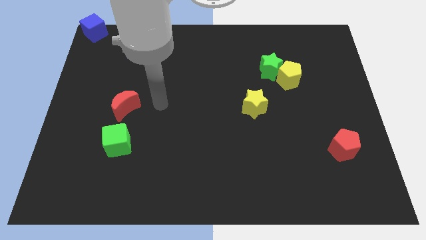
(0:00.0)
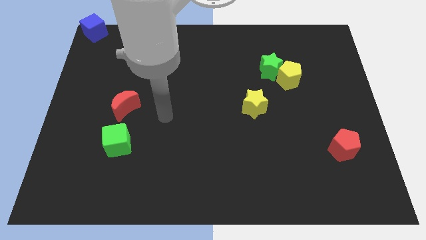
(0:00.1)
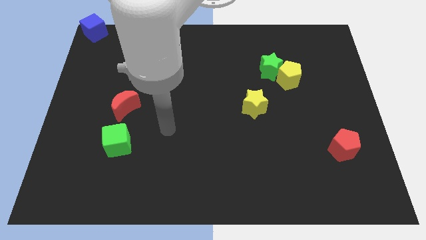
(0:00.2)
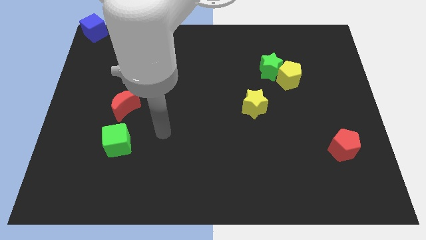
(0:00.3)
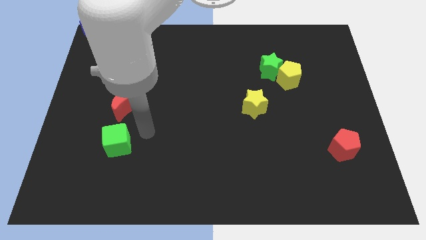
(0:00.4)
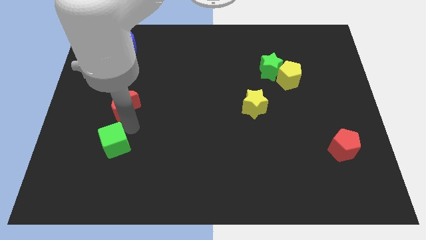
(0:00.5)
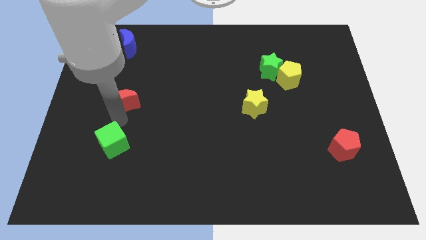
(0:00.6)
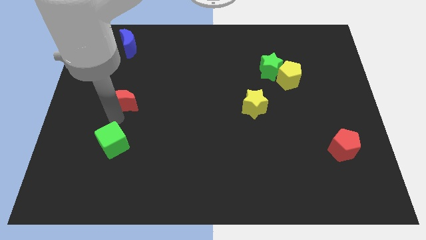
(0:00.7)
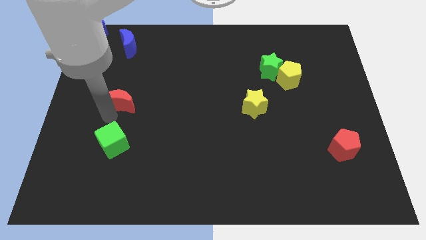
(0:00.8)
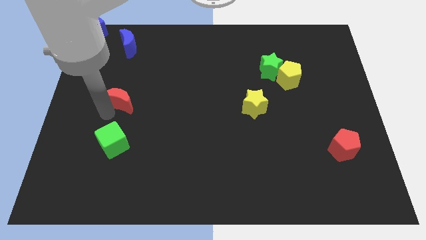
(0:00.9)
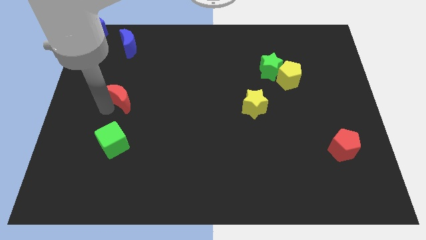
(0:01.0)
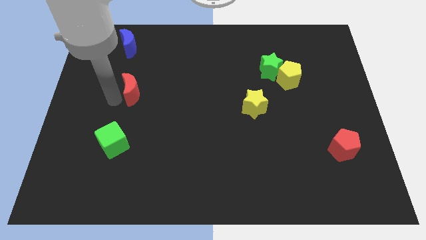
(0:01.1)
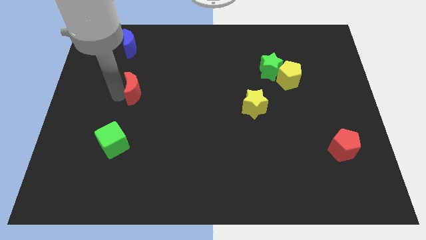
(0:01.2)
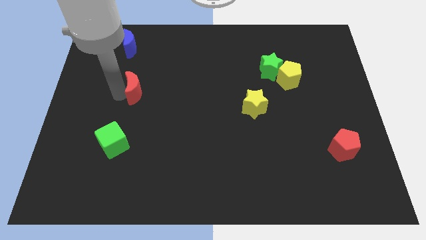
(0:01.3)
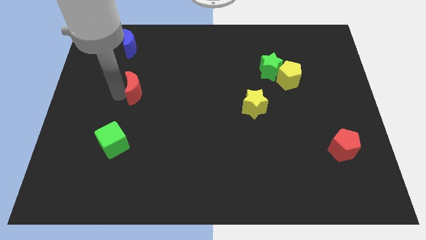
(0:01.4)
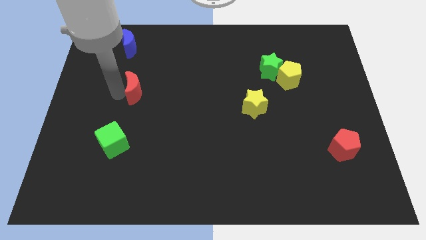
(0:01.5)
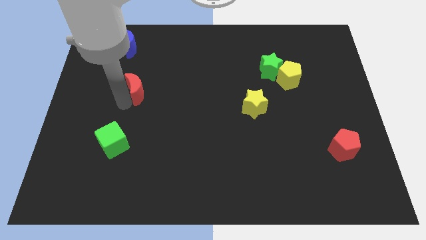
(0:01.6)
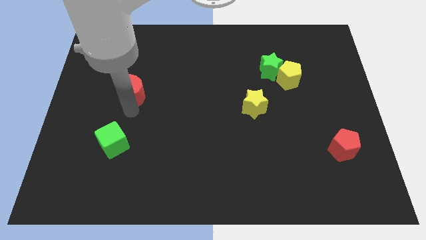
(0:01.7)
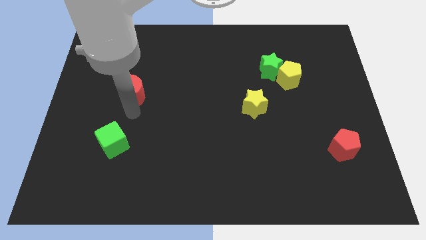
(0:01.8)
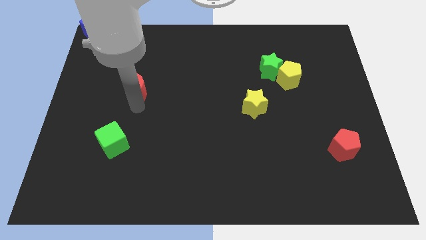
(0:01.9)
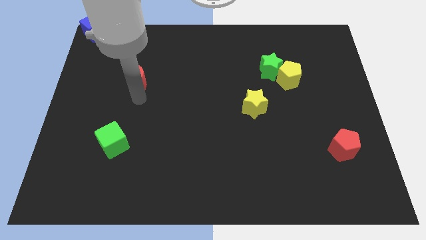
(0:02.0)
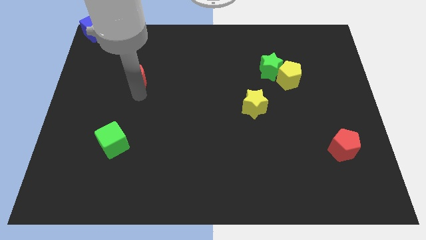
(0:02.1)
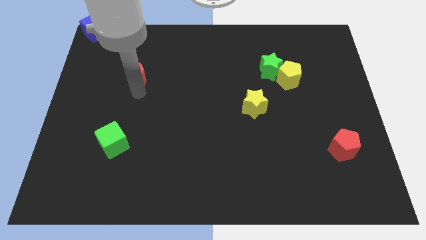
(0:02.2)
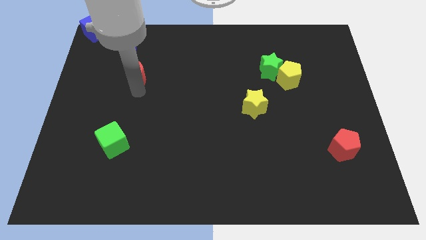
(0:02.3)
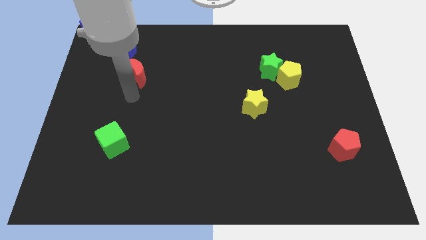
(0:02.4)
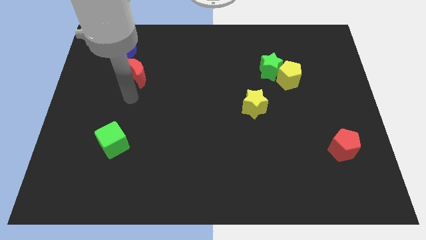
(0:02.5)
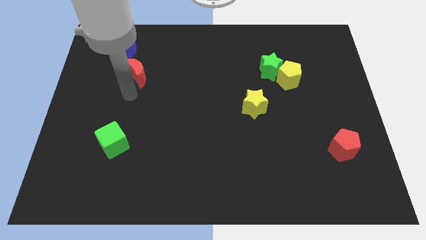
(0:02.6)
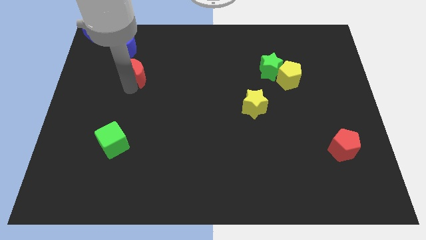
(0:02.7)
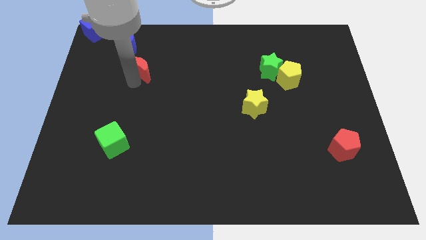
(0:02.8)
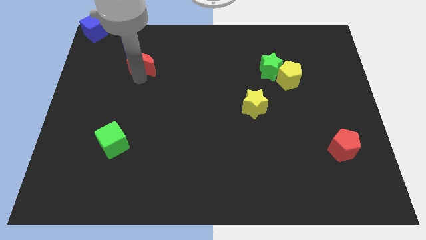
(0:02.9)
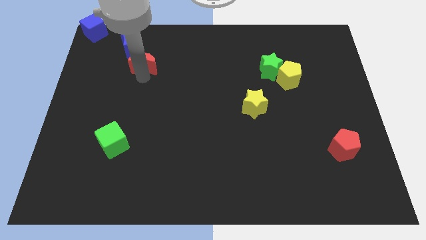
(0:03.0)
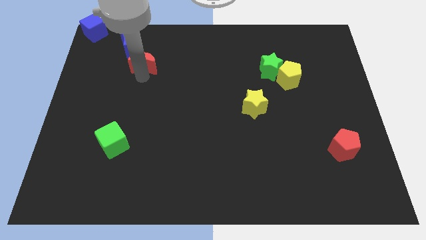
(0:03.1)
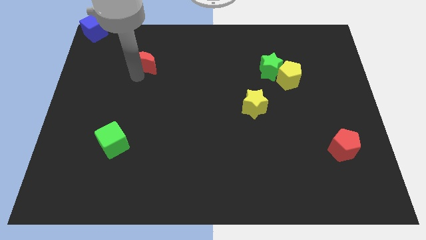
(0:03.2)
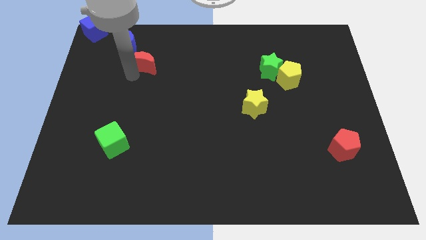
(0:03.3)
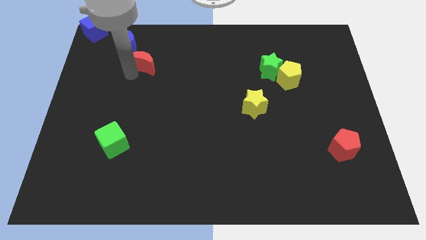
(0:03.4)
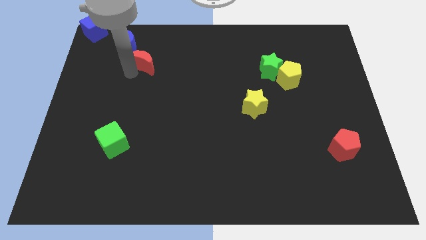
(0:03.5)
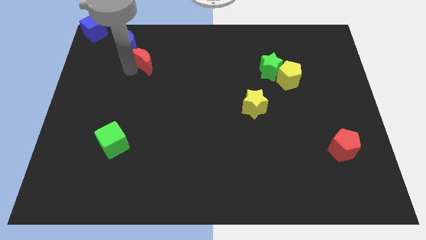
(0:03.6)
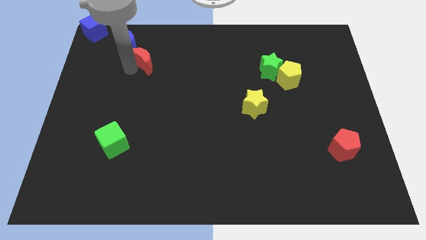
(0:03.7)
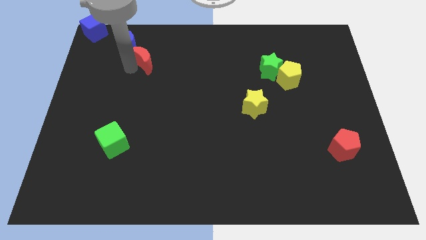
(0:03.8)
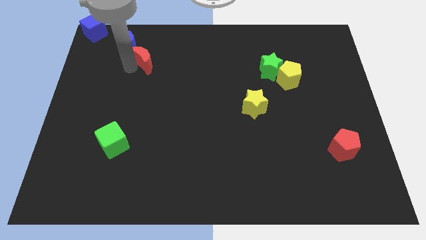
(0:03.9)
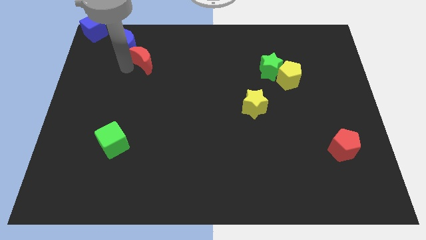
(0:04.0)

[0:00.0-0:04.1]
push the red moon close to the blue moon

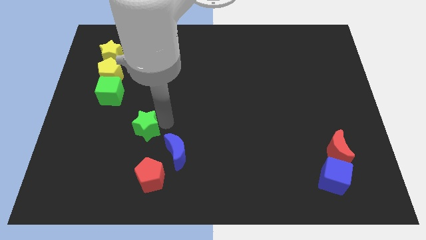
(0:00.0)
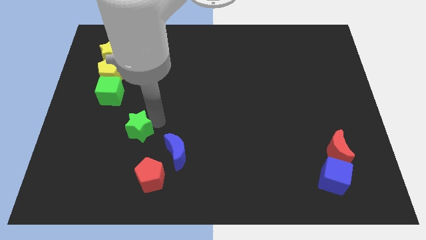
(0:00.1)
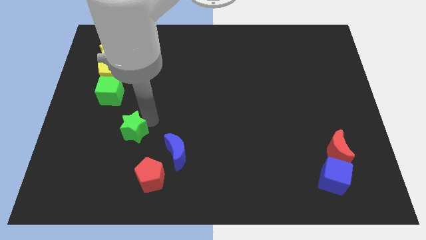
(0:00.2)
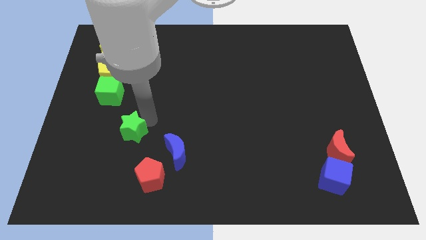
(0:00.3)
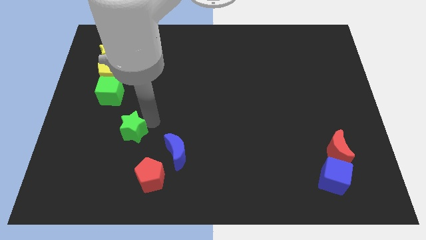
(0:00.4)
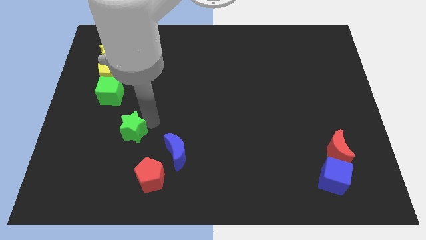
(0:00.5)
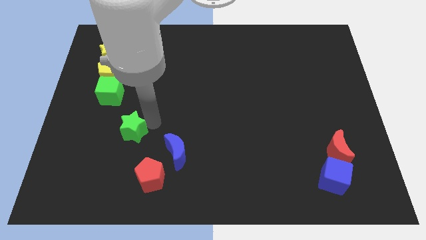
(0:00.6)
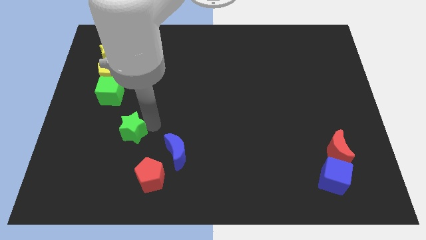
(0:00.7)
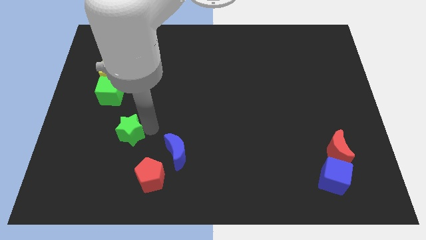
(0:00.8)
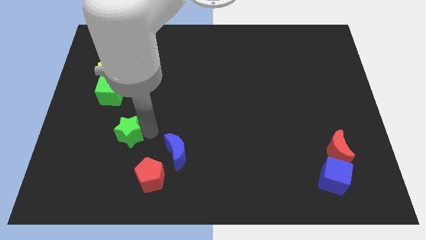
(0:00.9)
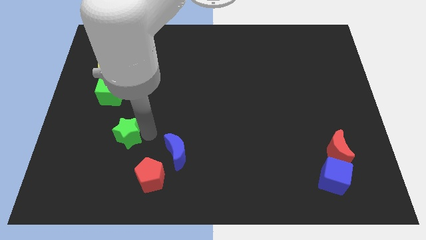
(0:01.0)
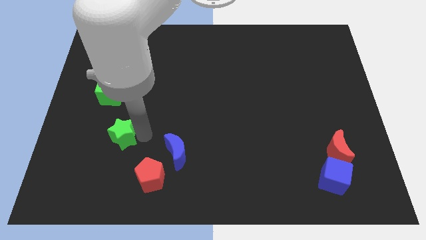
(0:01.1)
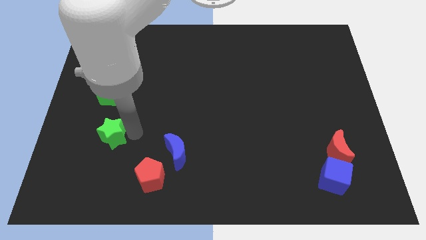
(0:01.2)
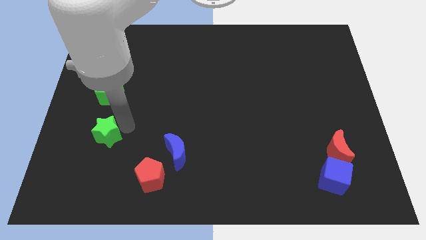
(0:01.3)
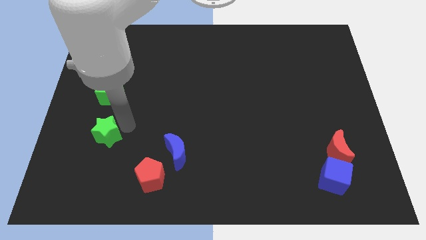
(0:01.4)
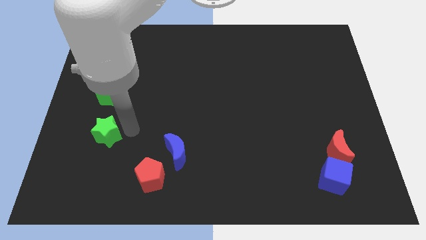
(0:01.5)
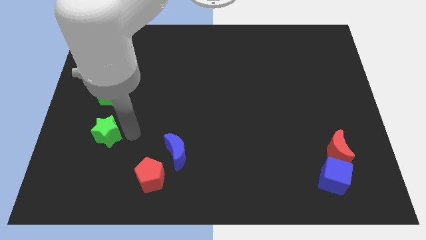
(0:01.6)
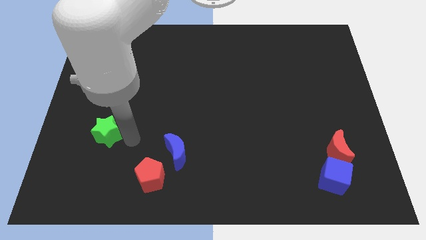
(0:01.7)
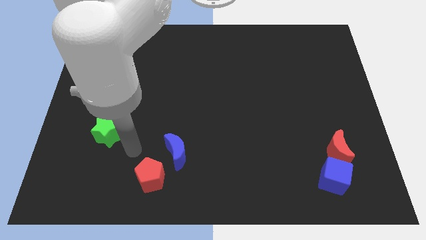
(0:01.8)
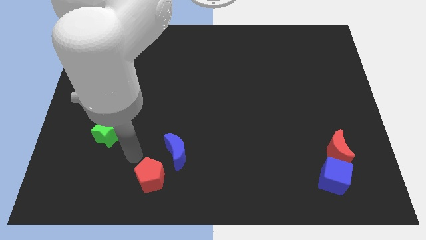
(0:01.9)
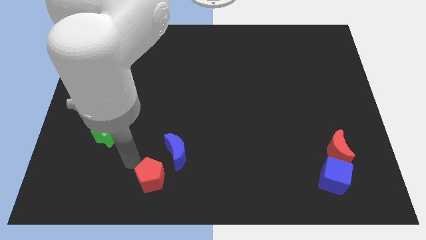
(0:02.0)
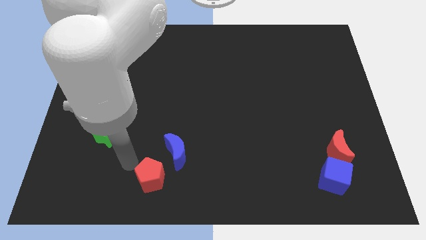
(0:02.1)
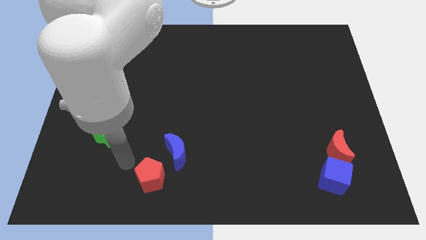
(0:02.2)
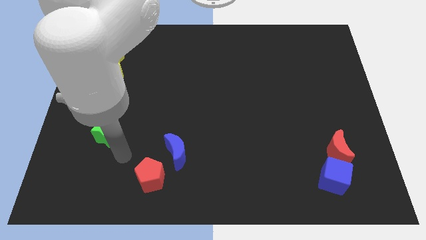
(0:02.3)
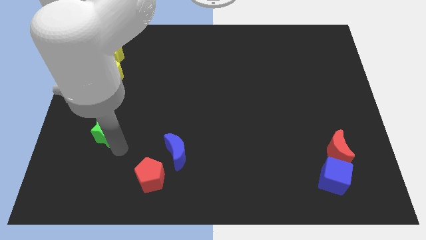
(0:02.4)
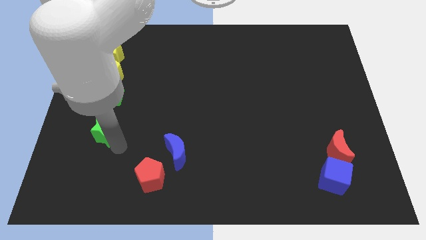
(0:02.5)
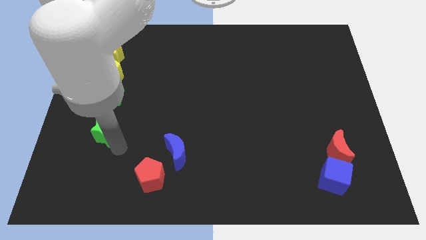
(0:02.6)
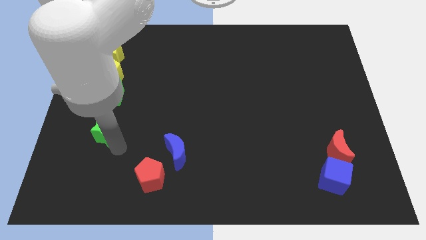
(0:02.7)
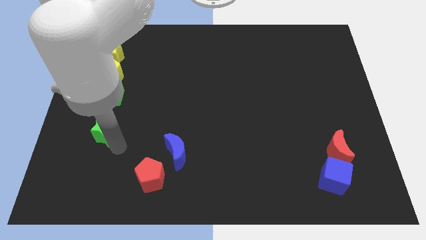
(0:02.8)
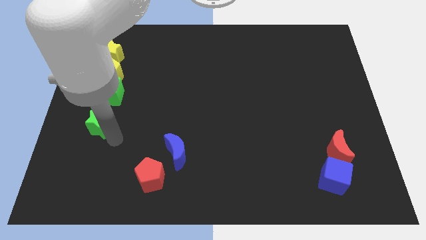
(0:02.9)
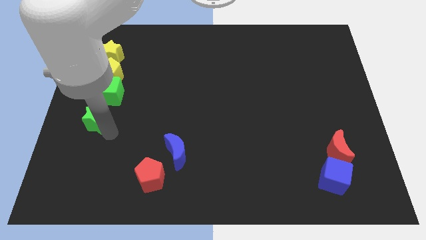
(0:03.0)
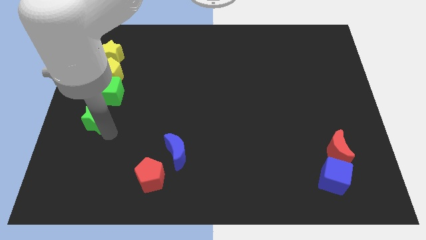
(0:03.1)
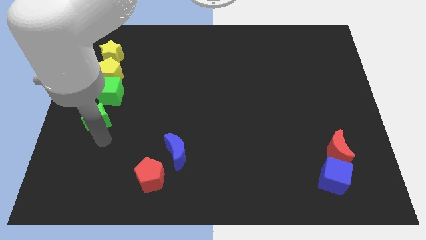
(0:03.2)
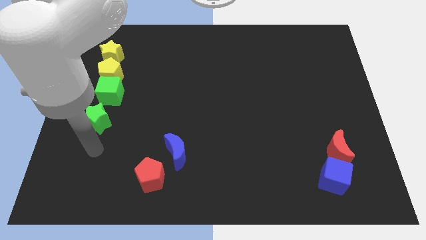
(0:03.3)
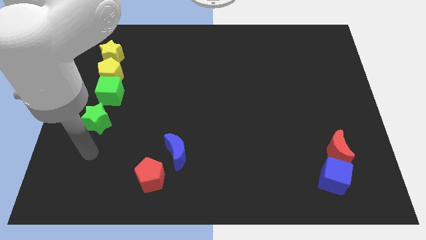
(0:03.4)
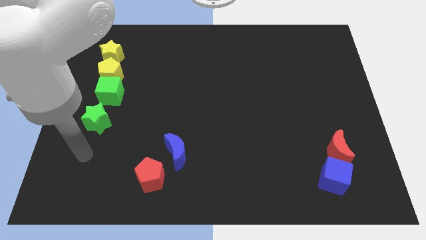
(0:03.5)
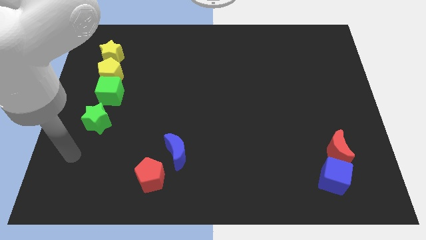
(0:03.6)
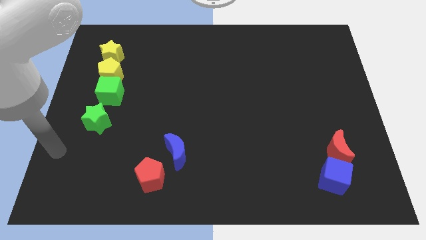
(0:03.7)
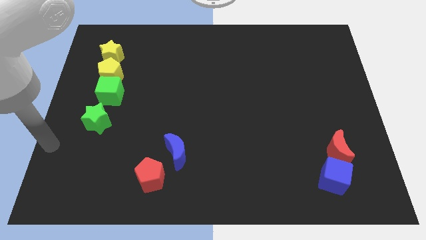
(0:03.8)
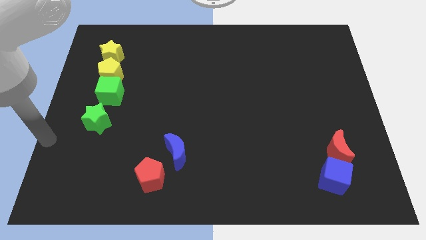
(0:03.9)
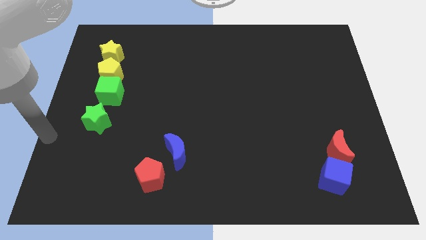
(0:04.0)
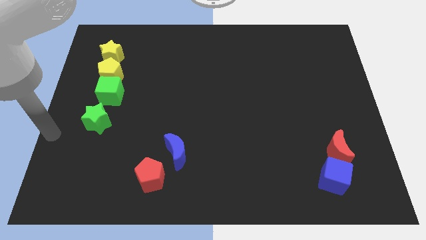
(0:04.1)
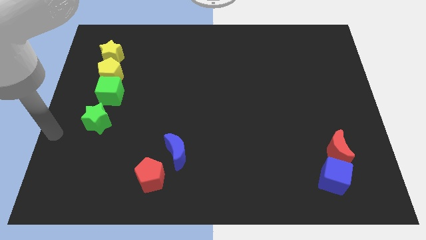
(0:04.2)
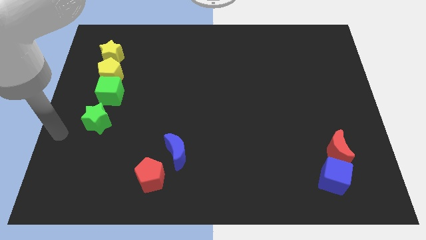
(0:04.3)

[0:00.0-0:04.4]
place the green star to the bottom of the green cube

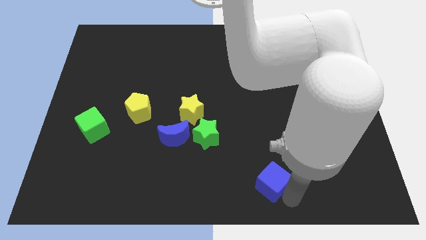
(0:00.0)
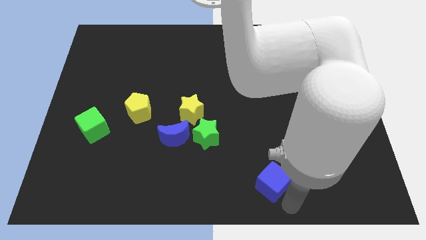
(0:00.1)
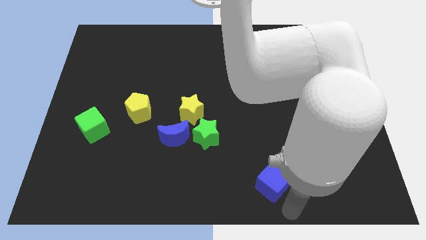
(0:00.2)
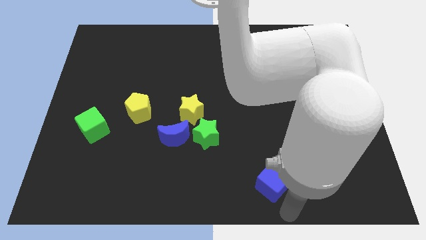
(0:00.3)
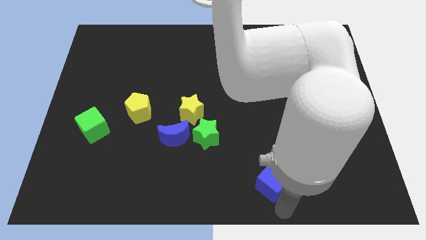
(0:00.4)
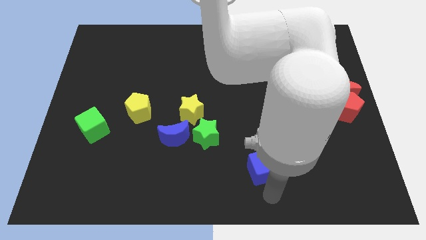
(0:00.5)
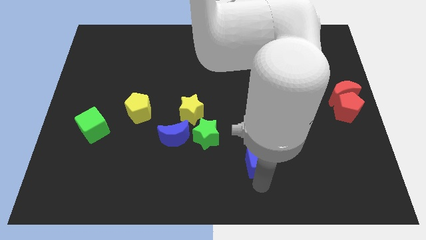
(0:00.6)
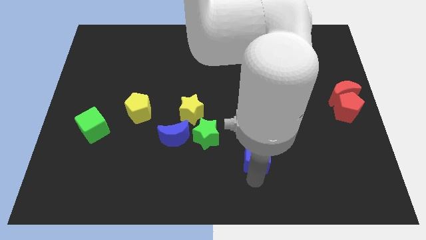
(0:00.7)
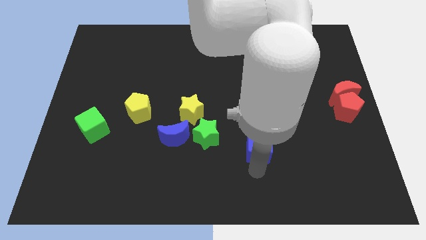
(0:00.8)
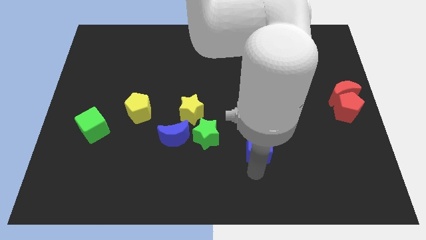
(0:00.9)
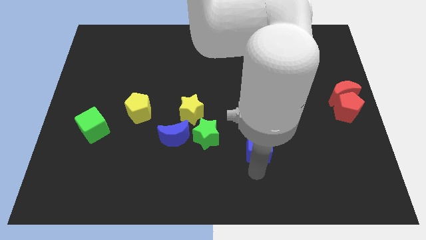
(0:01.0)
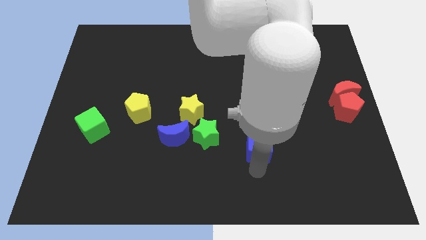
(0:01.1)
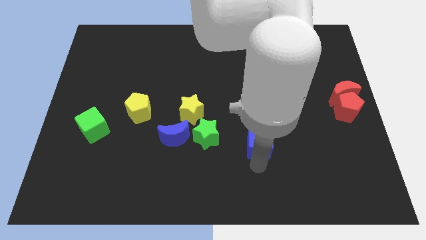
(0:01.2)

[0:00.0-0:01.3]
place blue cube to the right of the green star
